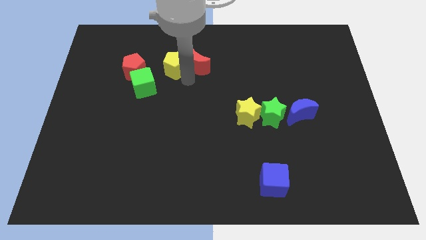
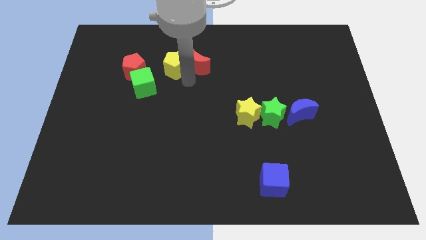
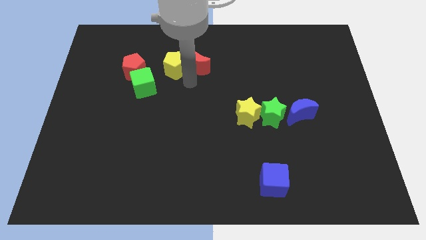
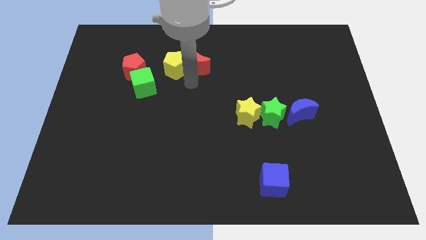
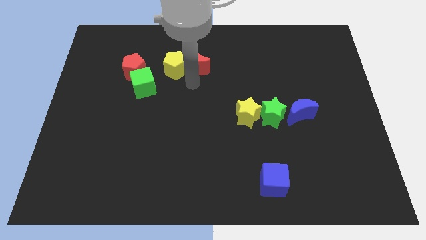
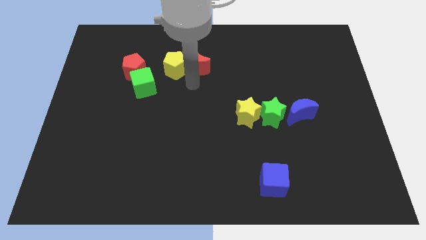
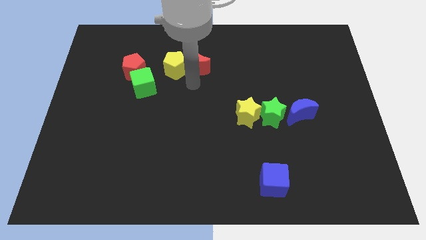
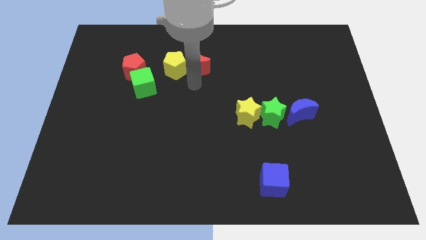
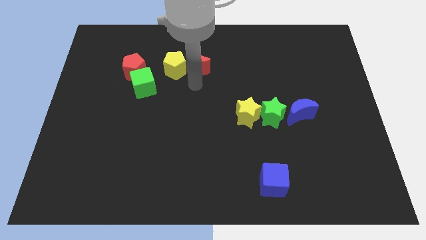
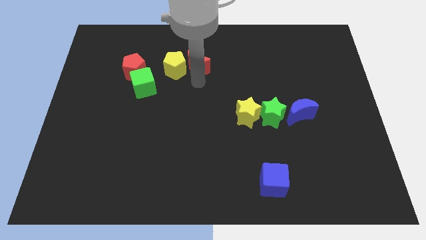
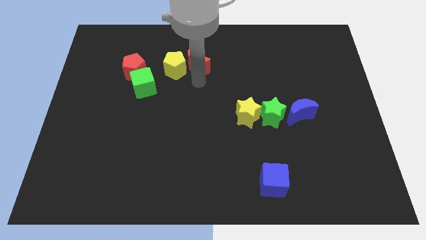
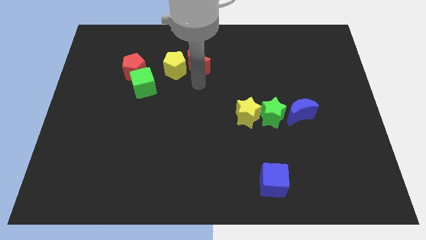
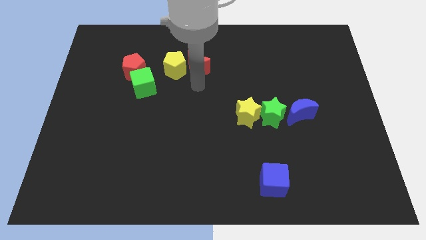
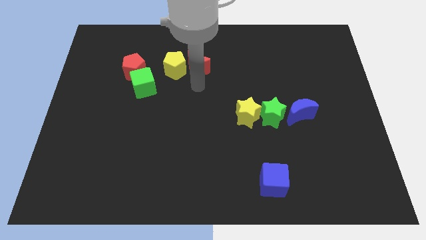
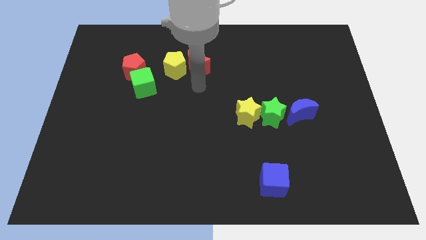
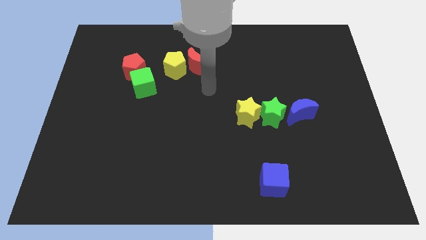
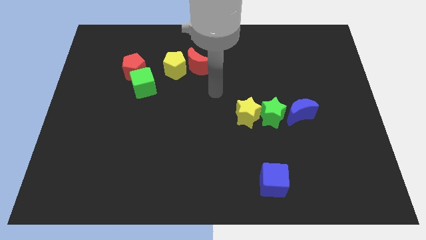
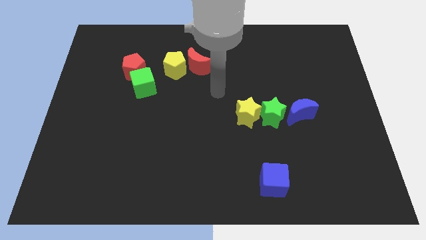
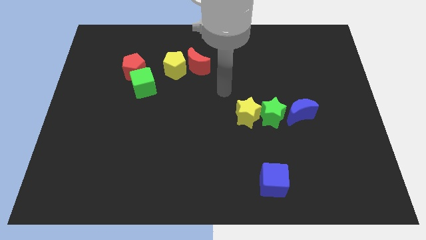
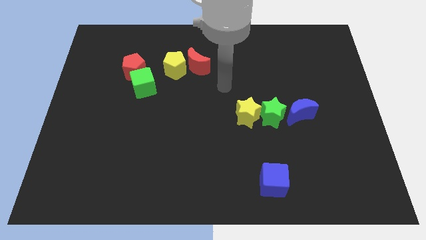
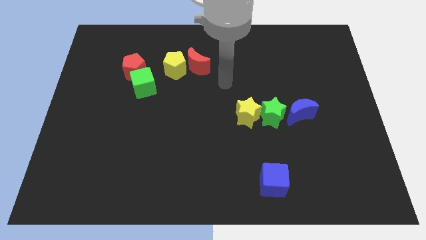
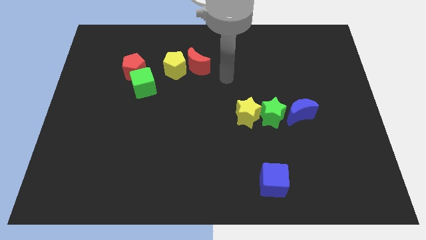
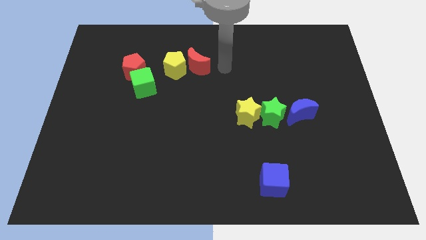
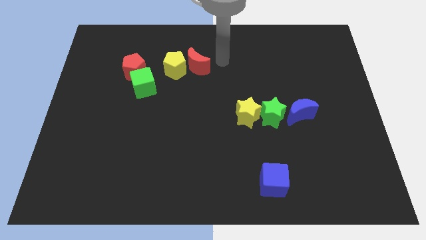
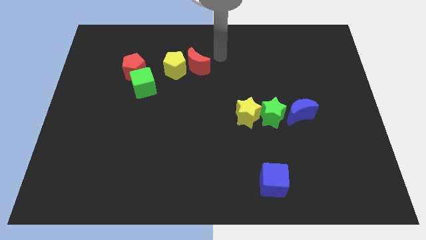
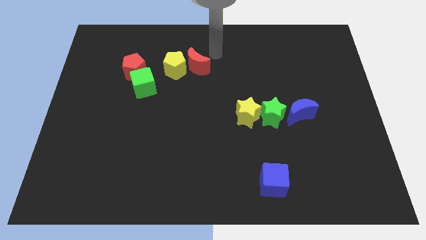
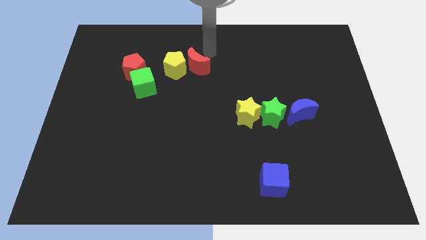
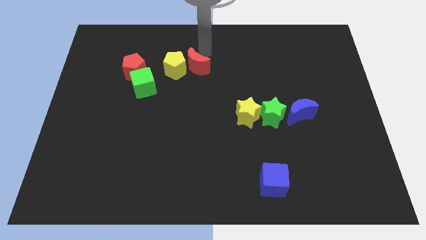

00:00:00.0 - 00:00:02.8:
place your arm at the top side of the red moon

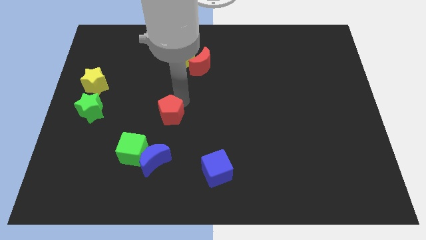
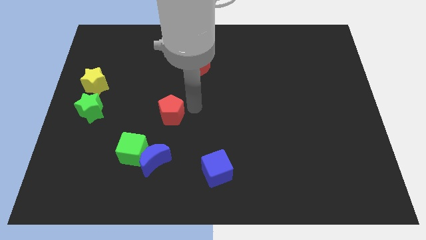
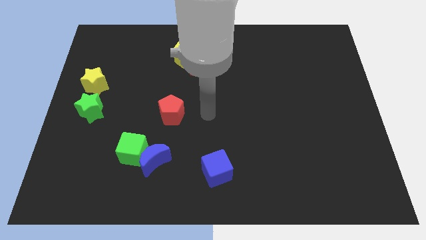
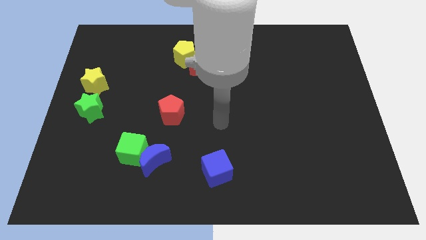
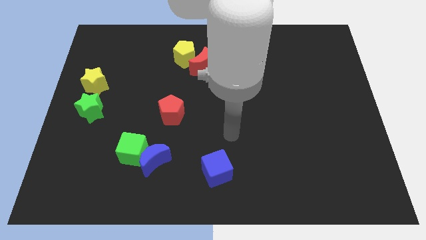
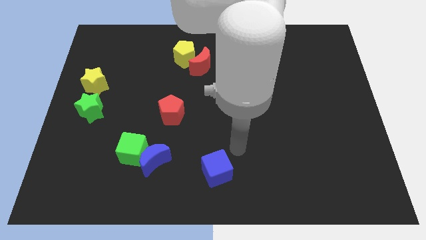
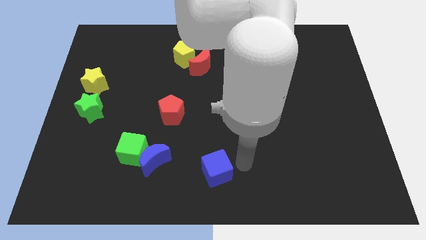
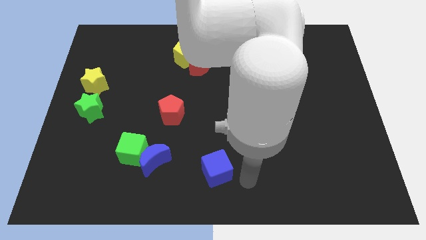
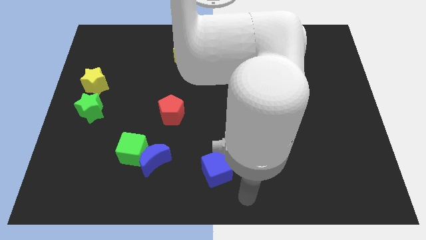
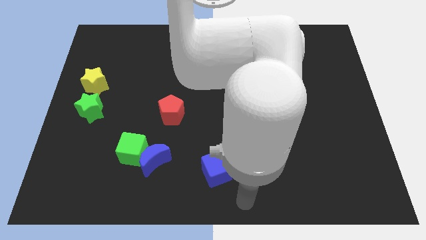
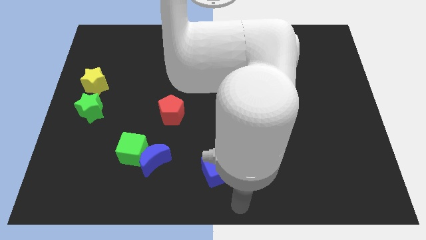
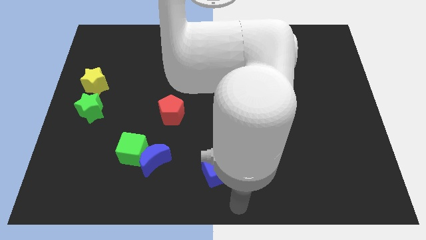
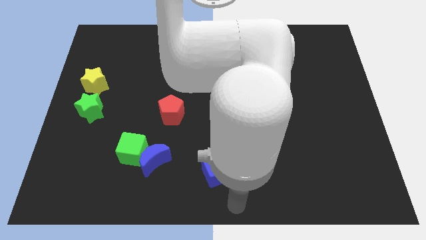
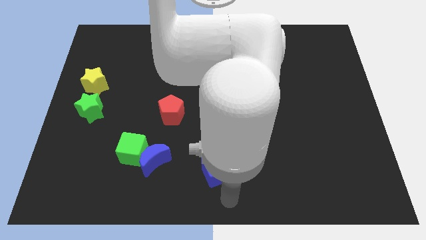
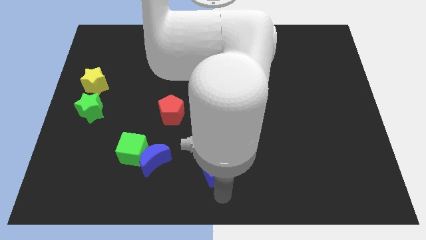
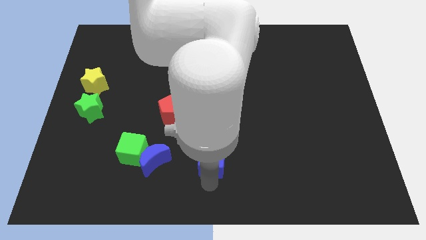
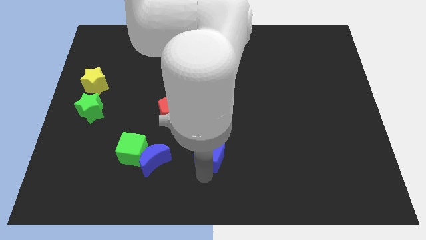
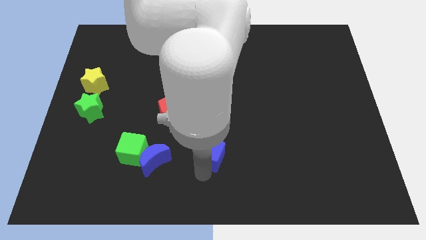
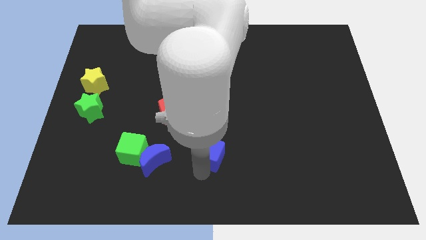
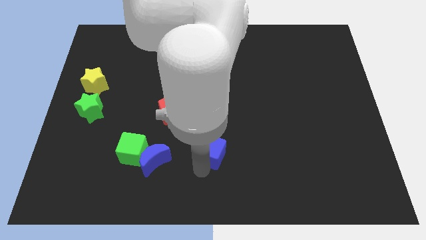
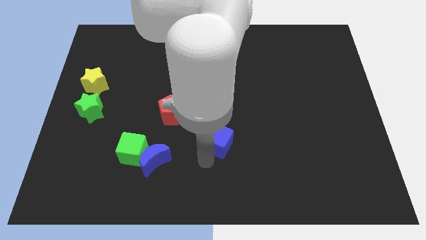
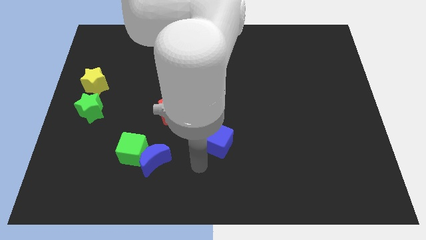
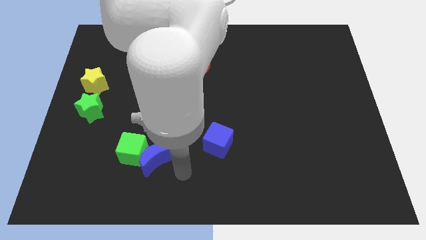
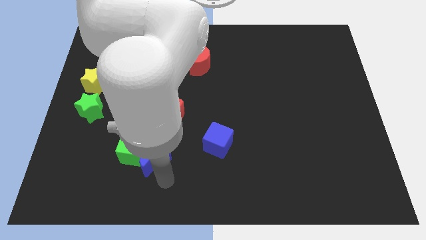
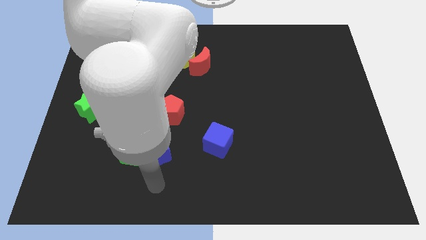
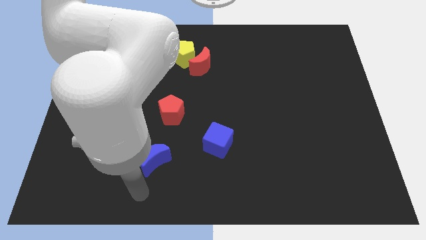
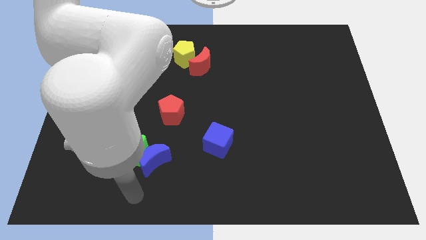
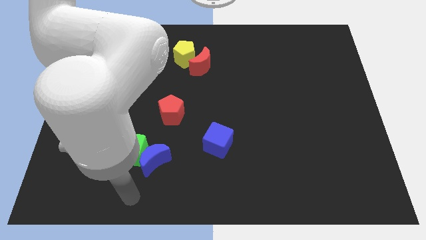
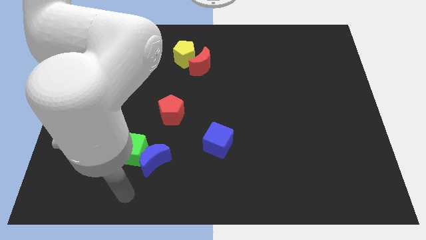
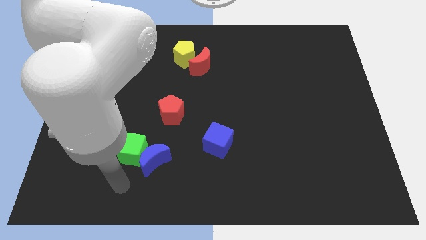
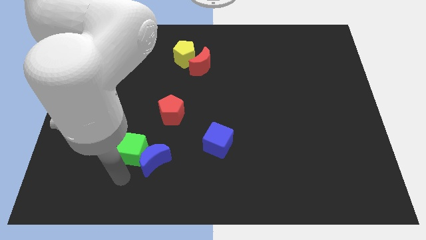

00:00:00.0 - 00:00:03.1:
slide the blue cube diagonally top right to the blue moon

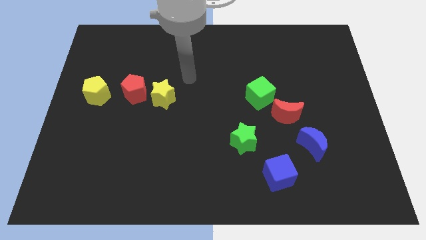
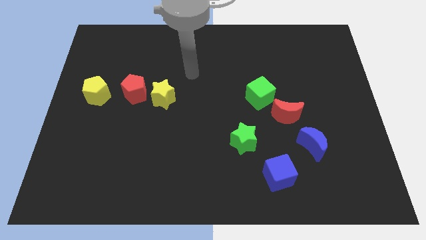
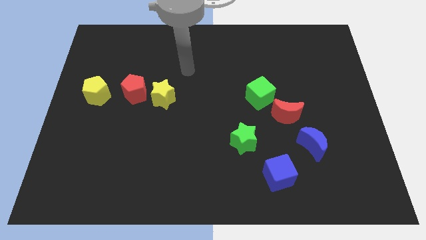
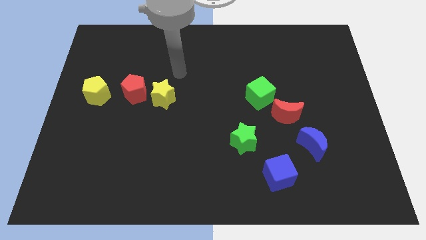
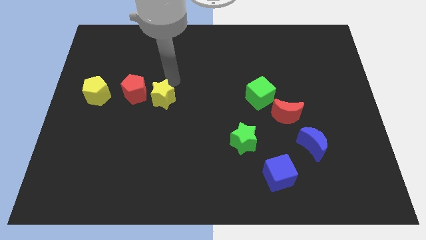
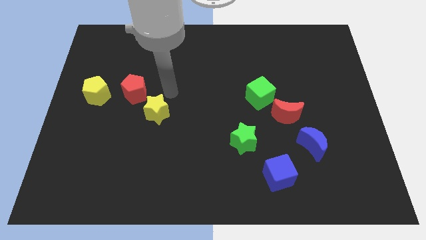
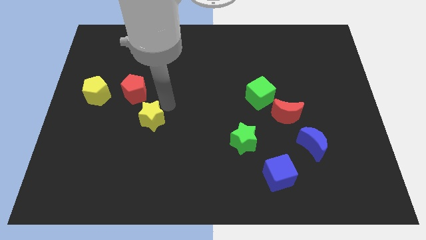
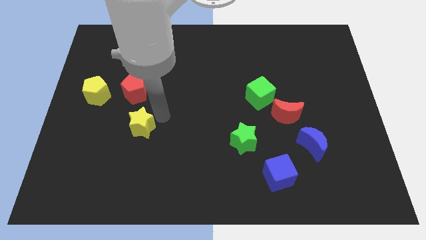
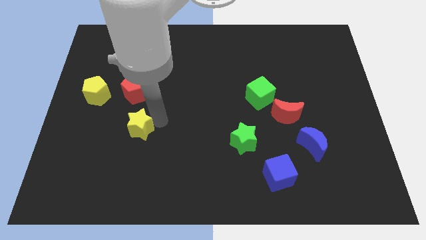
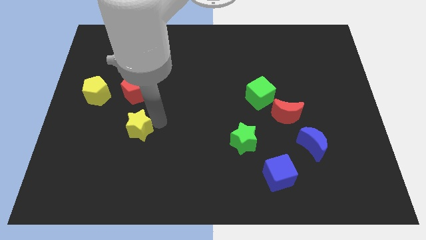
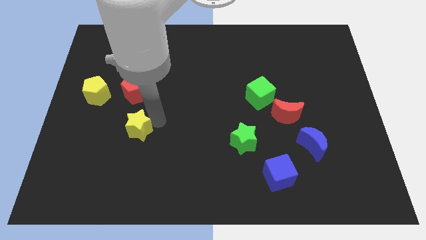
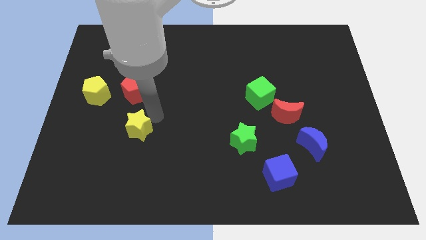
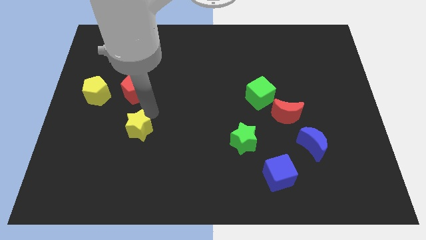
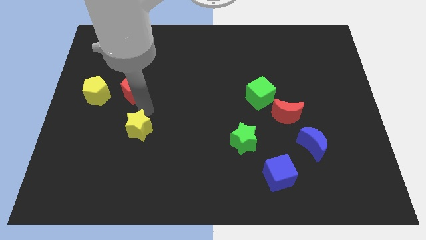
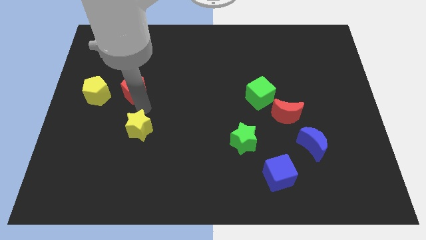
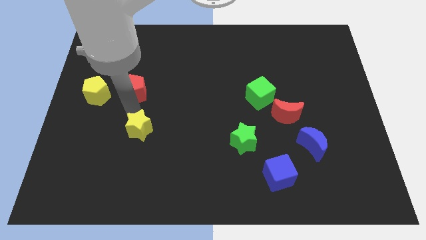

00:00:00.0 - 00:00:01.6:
move the yellow star below the red pentagon

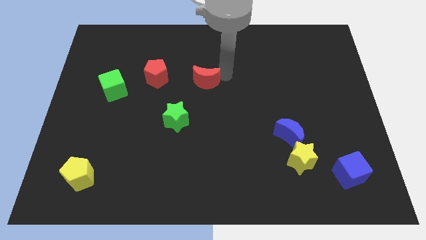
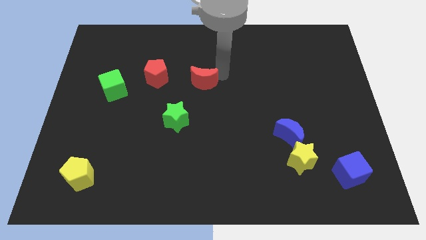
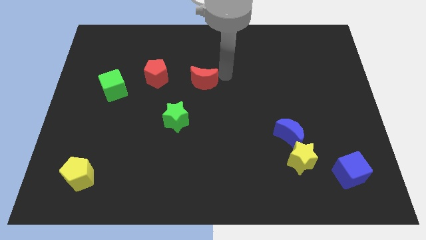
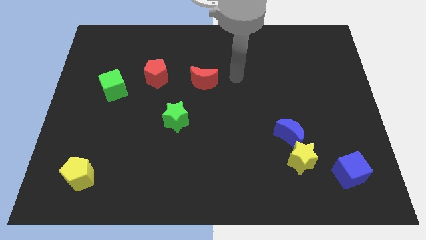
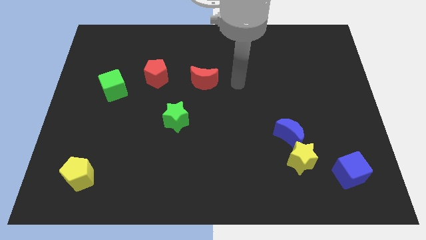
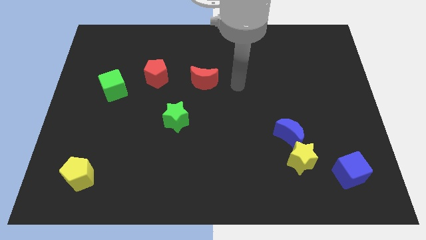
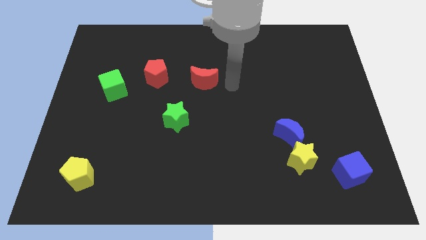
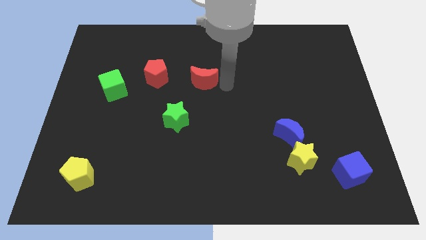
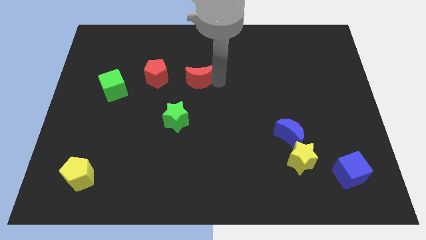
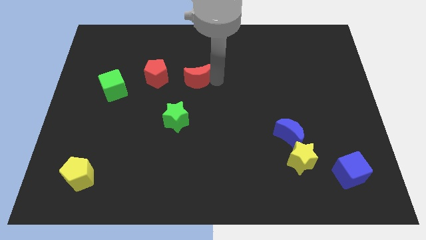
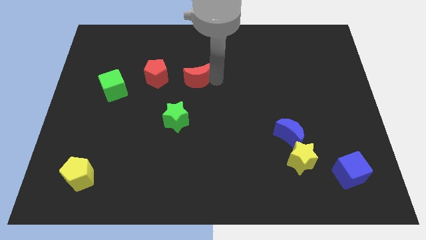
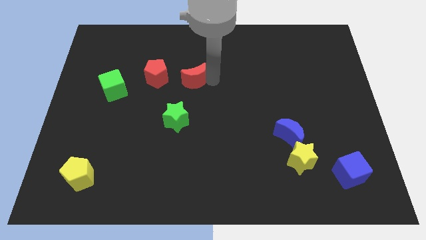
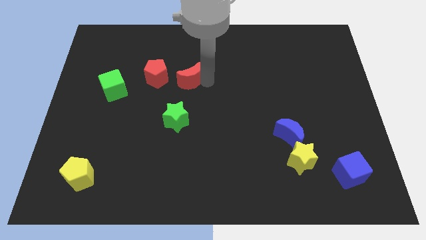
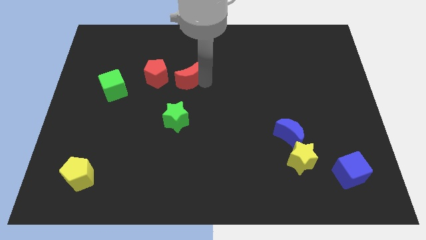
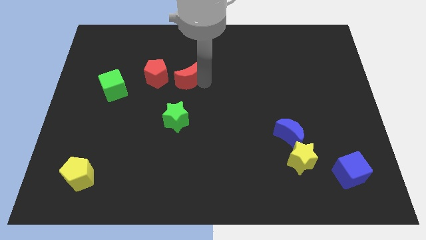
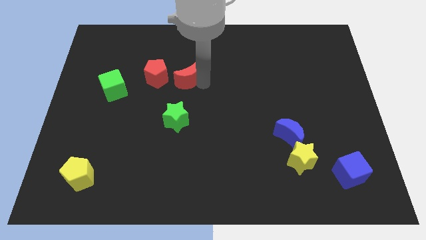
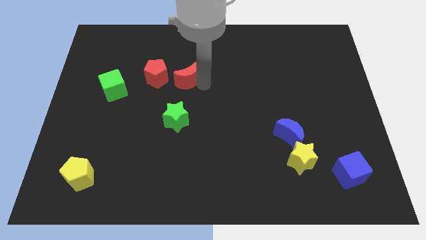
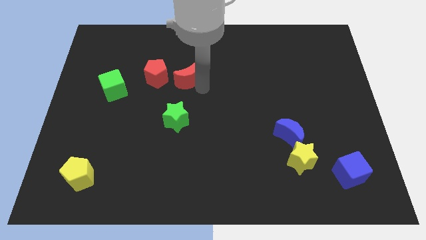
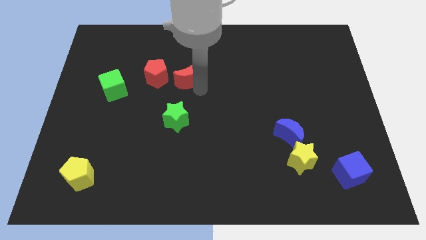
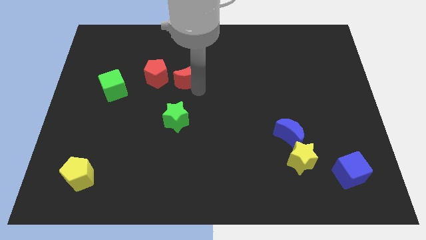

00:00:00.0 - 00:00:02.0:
push the red moon near t the red pentagon
